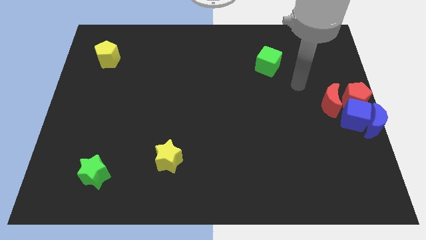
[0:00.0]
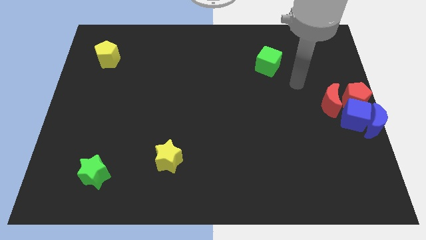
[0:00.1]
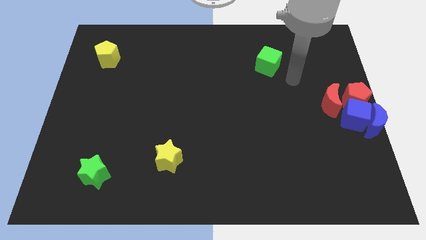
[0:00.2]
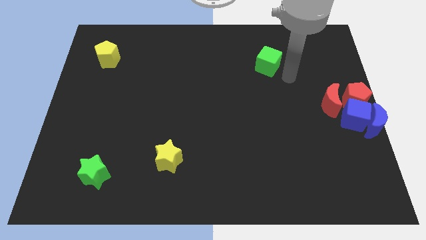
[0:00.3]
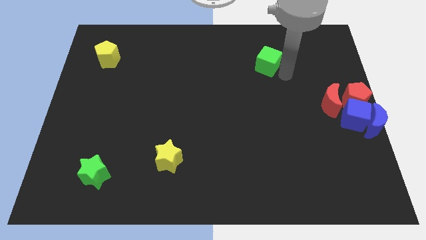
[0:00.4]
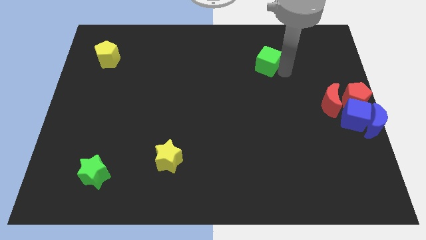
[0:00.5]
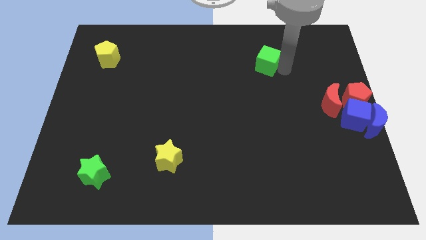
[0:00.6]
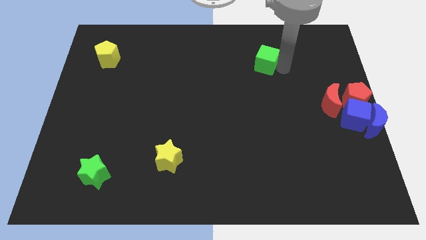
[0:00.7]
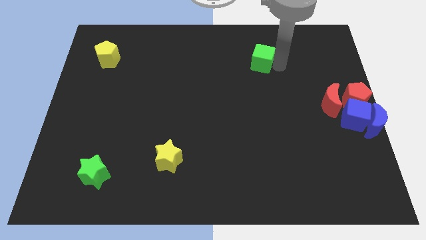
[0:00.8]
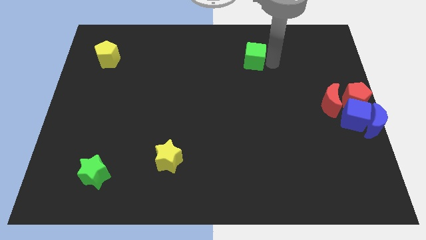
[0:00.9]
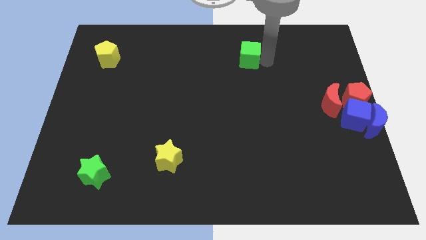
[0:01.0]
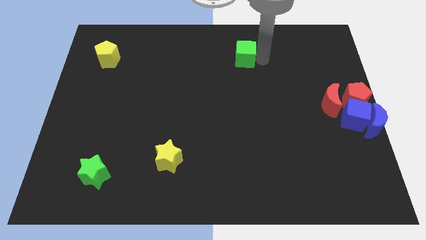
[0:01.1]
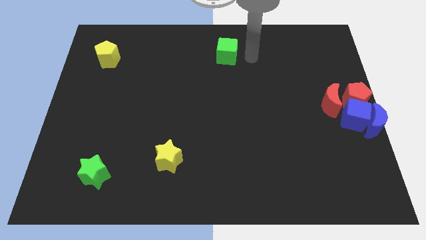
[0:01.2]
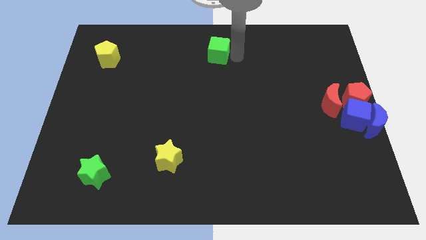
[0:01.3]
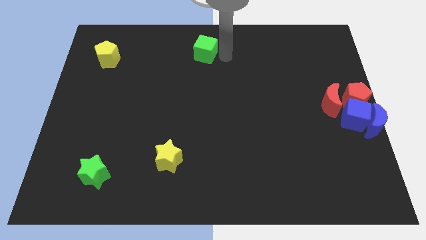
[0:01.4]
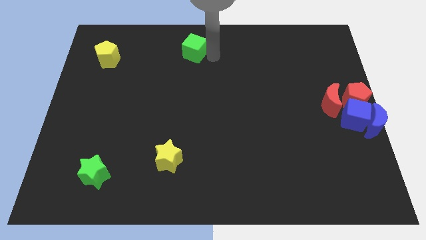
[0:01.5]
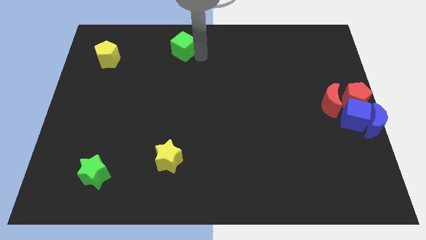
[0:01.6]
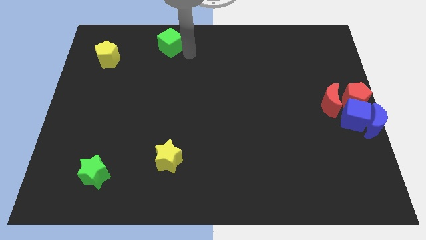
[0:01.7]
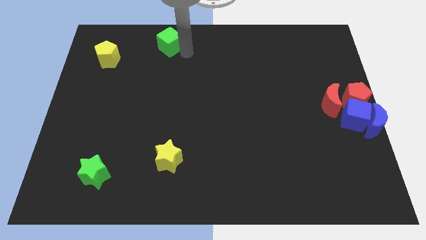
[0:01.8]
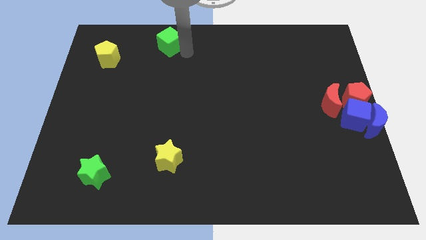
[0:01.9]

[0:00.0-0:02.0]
drag the green cube to the left side

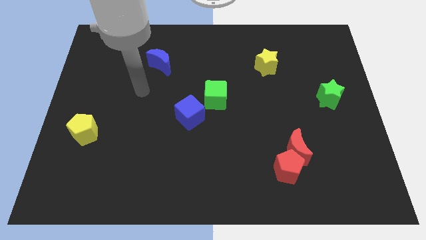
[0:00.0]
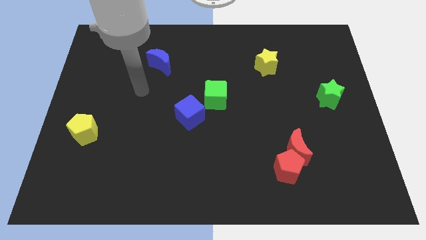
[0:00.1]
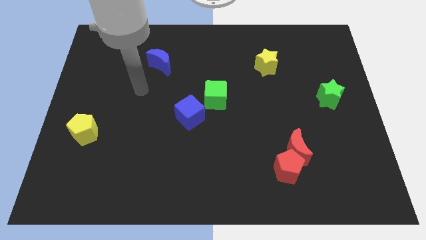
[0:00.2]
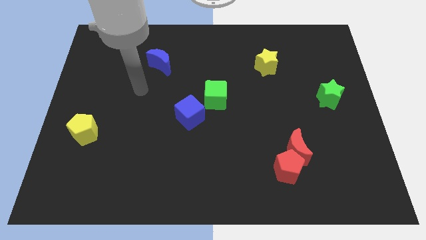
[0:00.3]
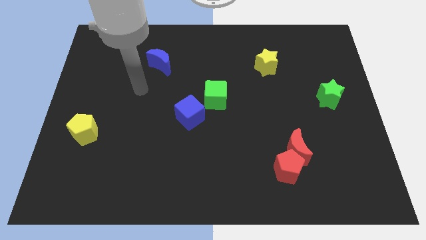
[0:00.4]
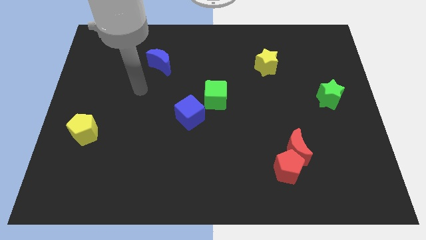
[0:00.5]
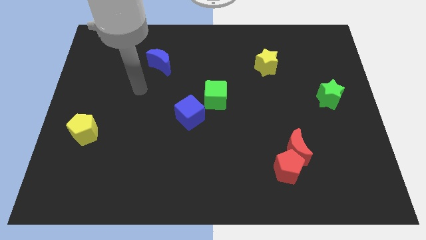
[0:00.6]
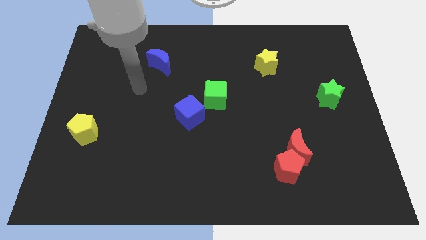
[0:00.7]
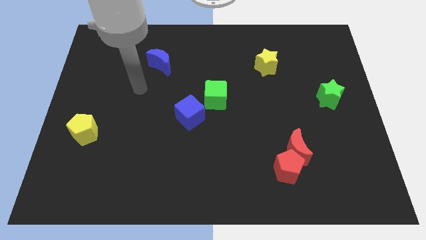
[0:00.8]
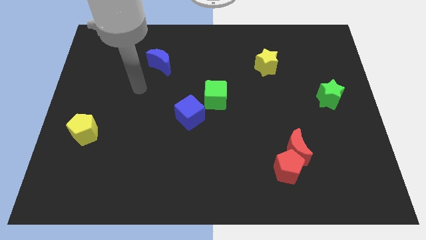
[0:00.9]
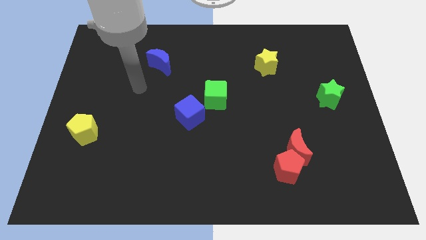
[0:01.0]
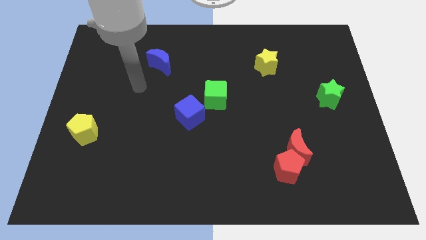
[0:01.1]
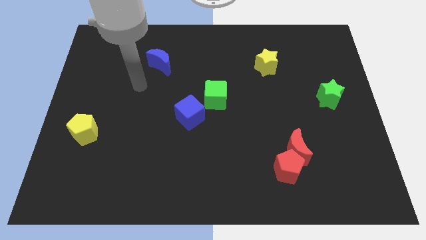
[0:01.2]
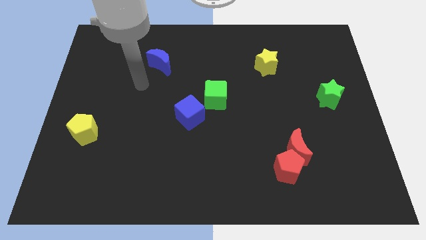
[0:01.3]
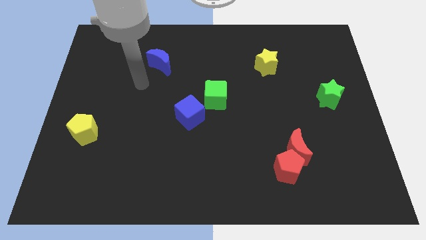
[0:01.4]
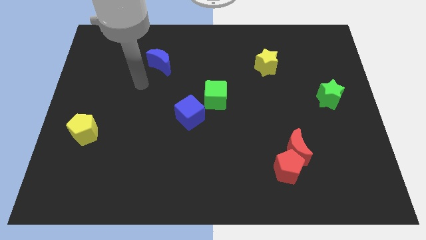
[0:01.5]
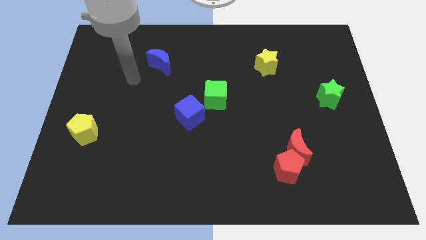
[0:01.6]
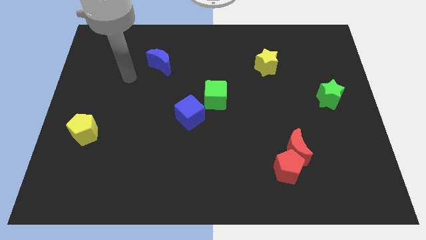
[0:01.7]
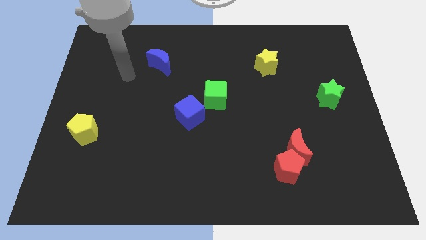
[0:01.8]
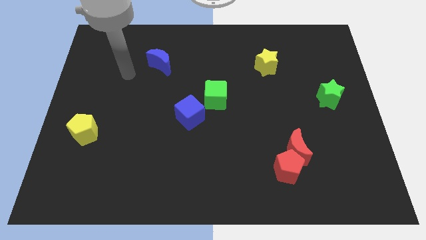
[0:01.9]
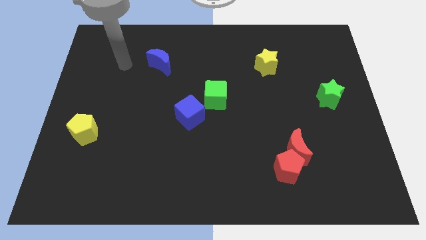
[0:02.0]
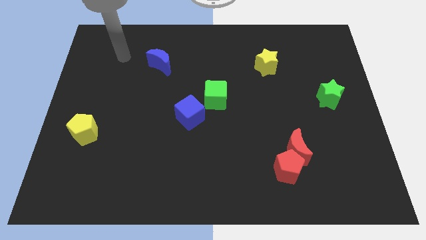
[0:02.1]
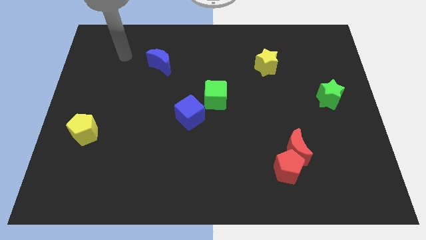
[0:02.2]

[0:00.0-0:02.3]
point your arm at the left of the blue crescent

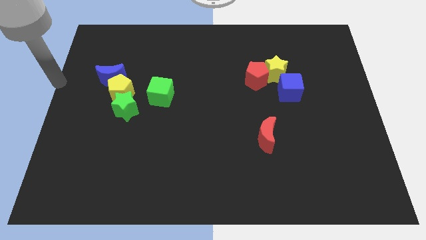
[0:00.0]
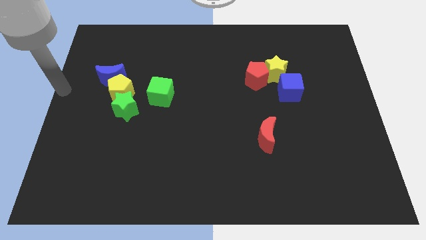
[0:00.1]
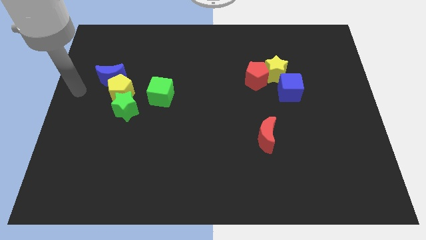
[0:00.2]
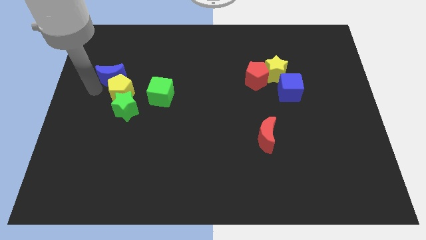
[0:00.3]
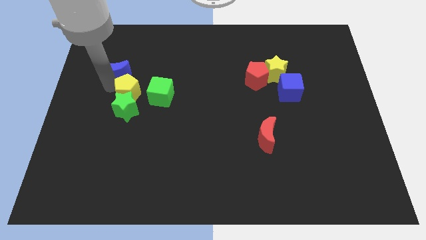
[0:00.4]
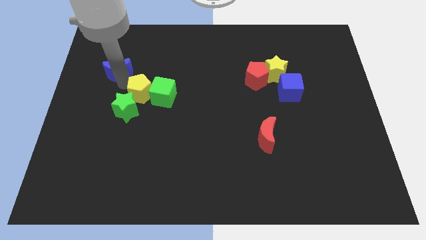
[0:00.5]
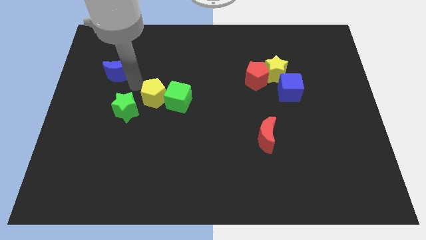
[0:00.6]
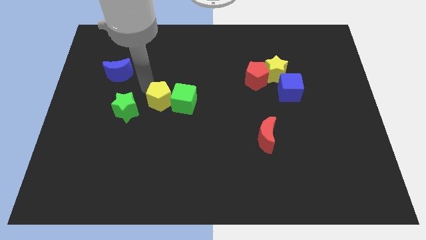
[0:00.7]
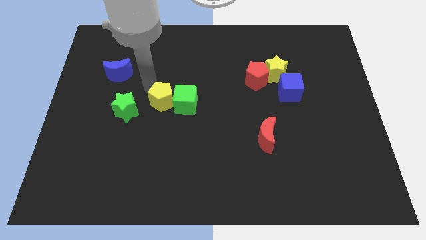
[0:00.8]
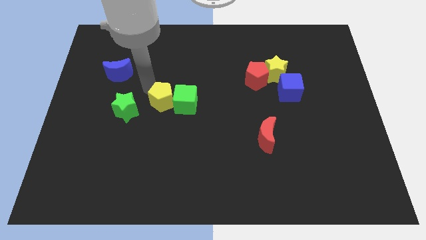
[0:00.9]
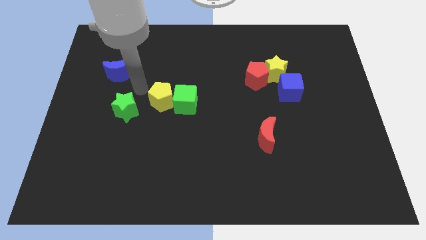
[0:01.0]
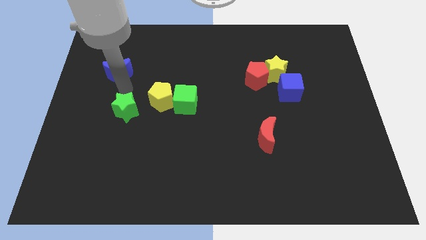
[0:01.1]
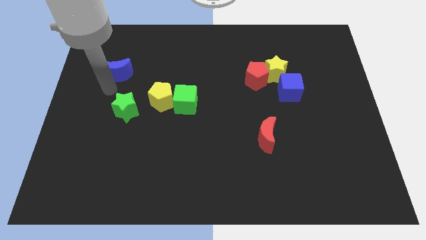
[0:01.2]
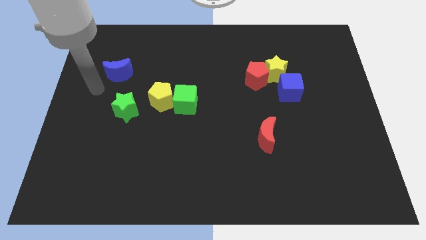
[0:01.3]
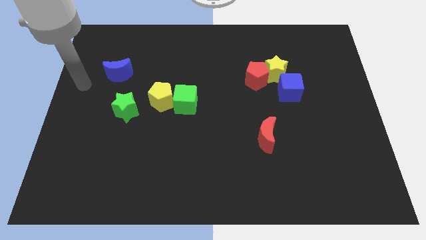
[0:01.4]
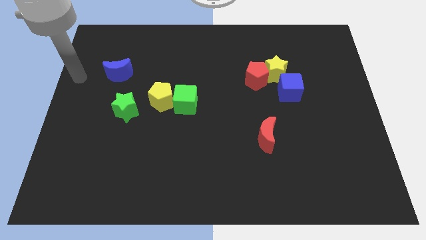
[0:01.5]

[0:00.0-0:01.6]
push the yellow pentagon to the right of the green star

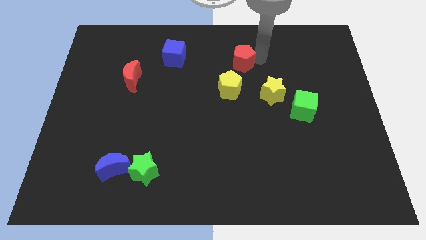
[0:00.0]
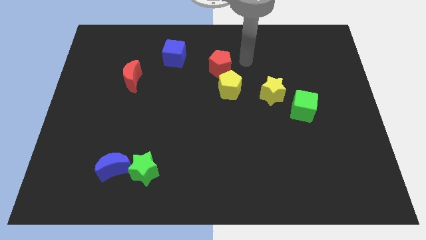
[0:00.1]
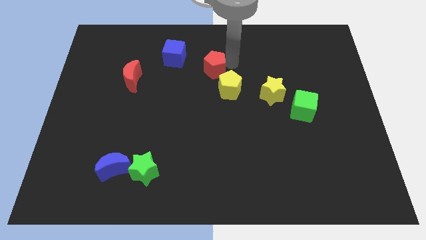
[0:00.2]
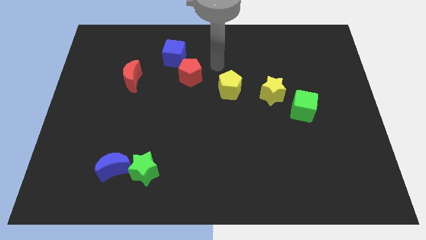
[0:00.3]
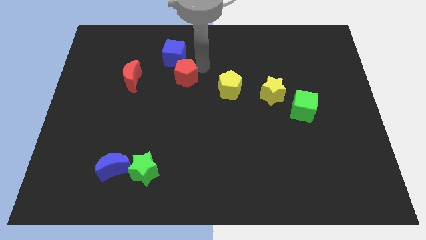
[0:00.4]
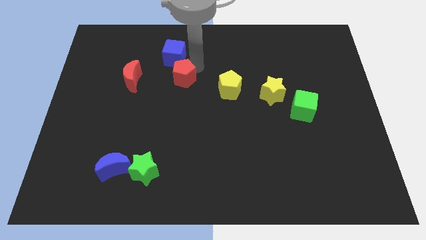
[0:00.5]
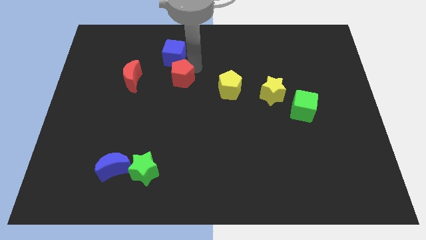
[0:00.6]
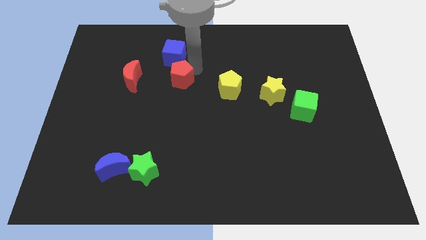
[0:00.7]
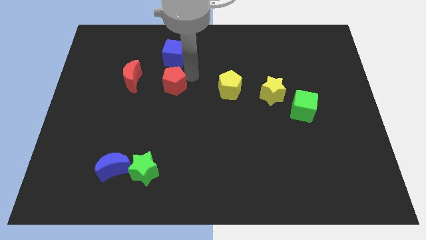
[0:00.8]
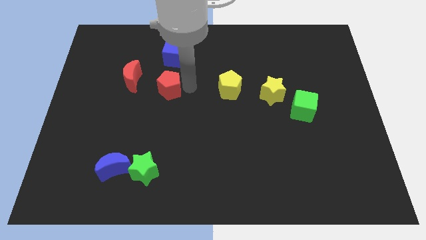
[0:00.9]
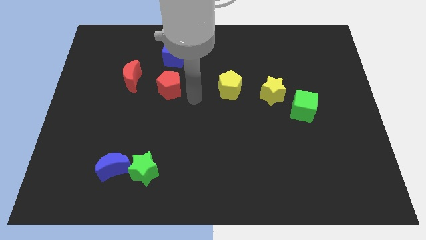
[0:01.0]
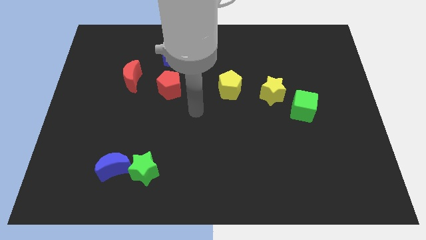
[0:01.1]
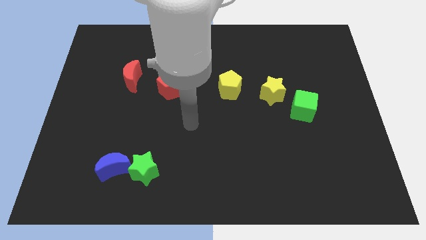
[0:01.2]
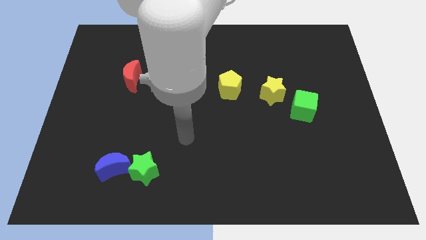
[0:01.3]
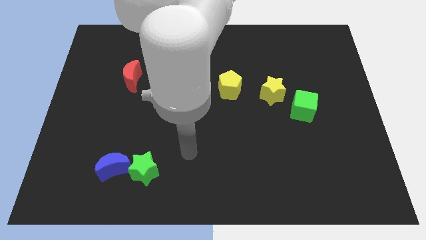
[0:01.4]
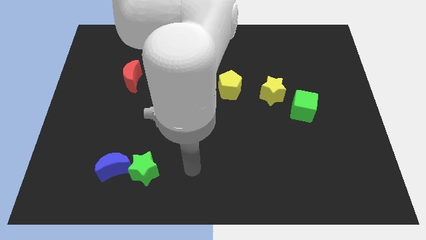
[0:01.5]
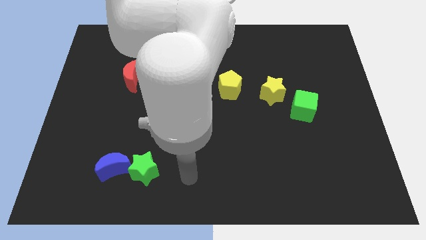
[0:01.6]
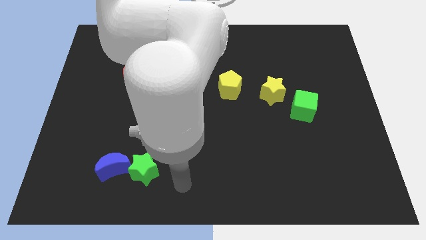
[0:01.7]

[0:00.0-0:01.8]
place the red pentagon under the blue cube

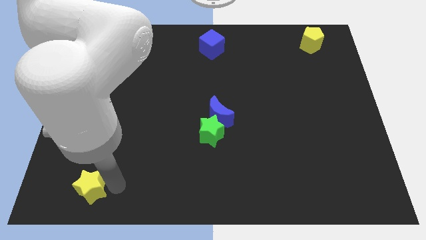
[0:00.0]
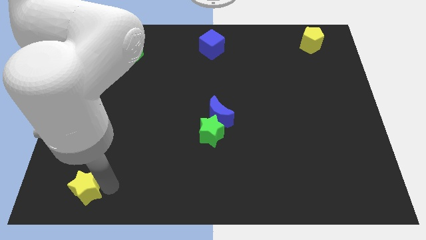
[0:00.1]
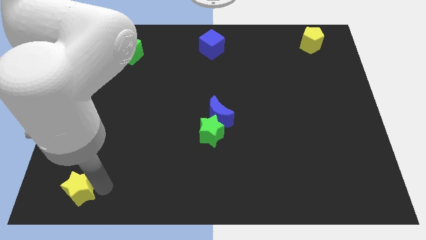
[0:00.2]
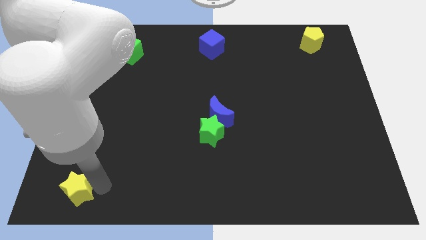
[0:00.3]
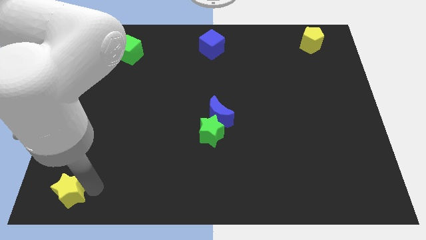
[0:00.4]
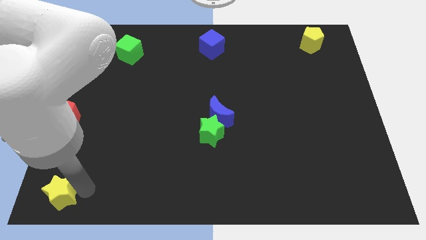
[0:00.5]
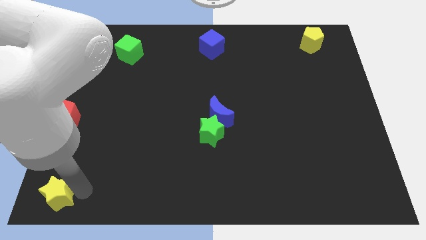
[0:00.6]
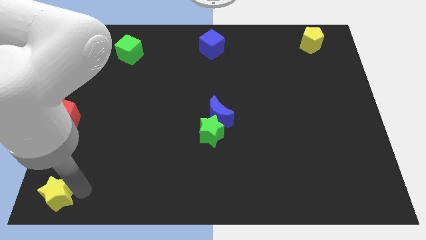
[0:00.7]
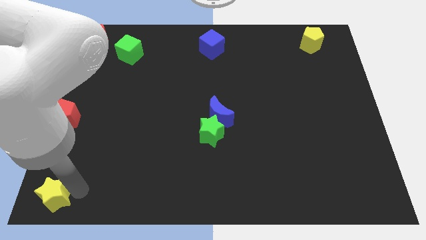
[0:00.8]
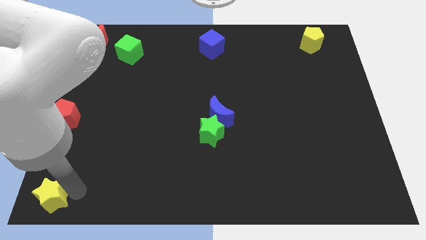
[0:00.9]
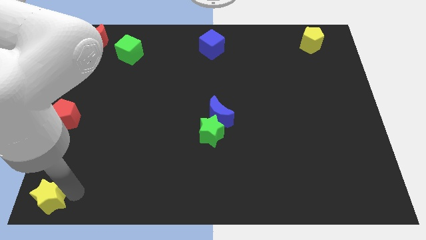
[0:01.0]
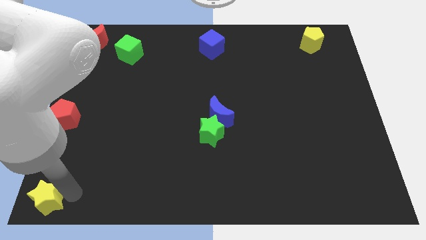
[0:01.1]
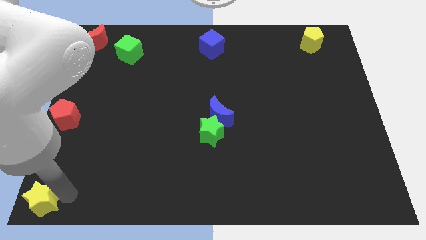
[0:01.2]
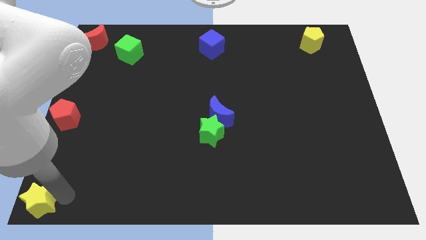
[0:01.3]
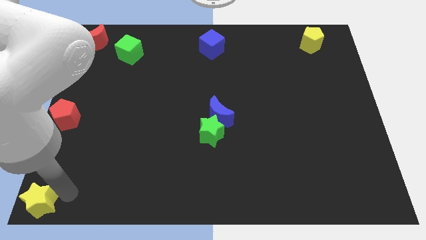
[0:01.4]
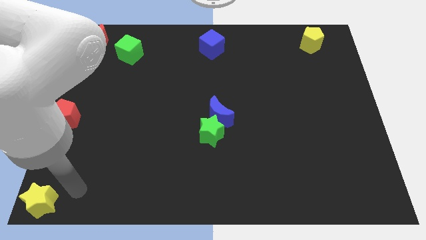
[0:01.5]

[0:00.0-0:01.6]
place the yellow star at the bottom left corner of the board
